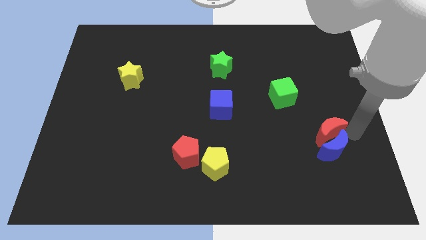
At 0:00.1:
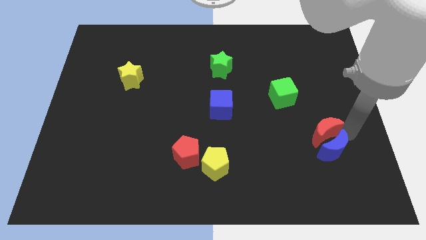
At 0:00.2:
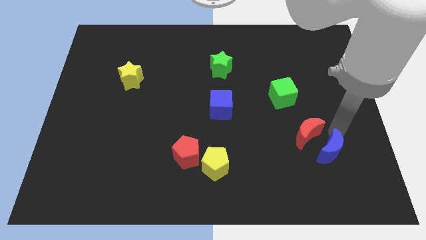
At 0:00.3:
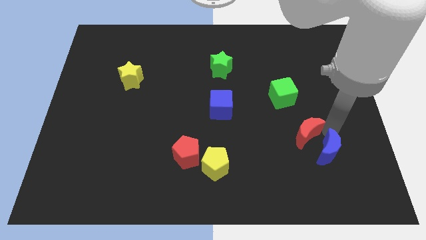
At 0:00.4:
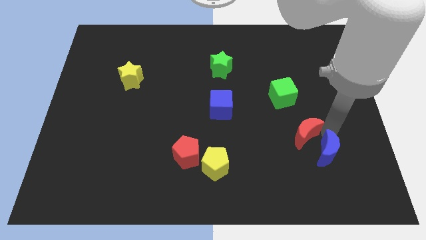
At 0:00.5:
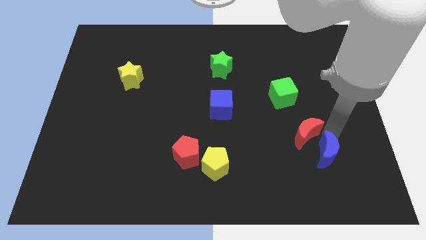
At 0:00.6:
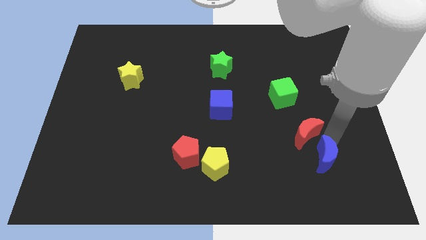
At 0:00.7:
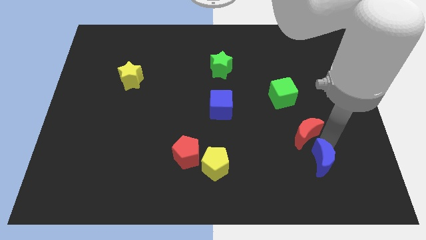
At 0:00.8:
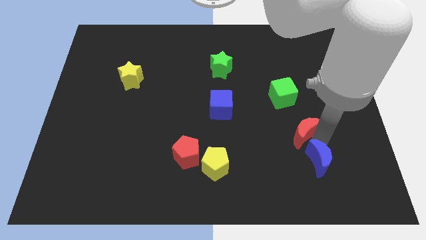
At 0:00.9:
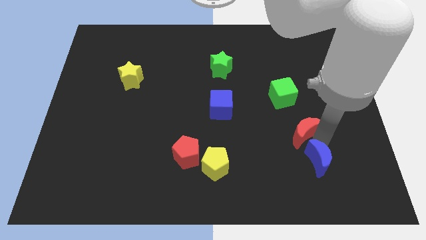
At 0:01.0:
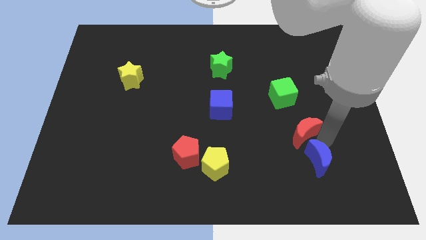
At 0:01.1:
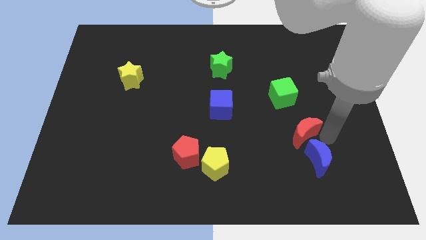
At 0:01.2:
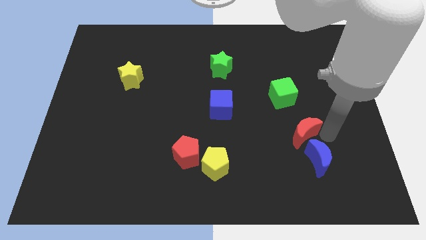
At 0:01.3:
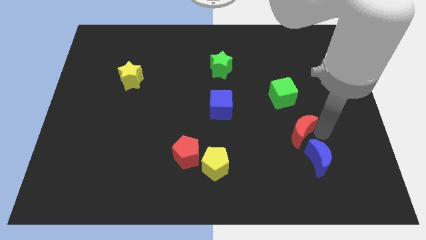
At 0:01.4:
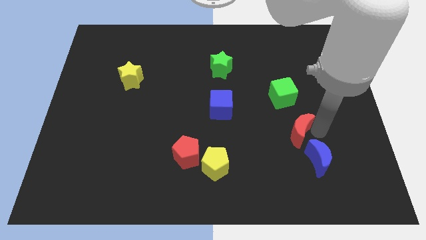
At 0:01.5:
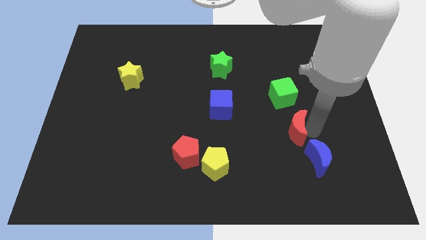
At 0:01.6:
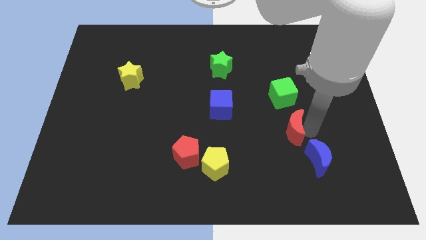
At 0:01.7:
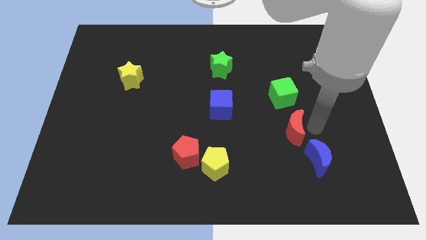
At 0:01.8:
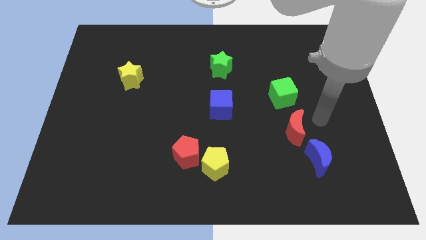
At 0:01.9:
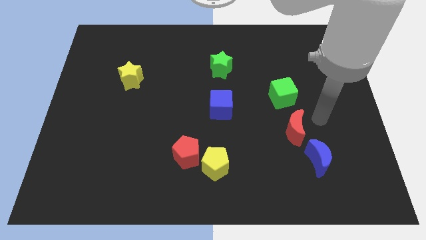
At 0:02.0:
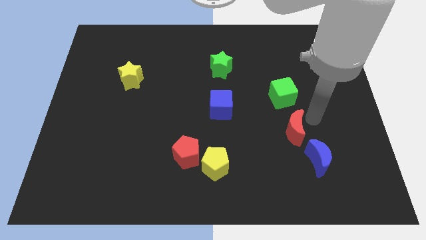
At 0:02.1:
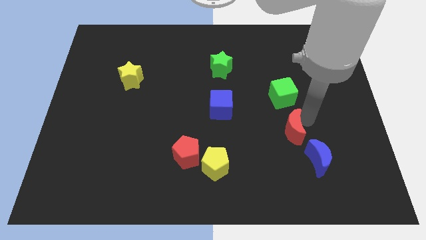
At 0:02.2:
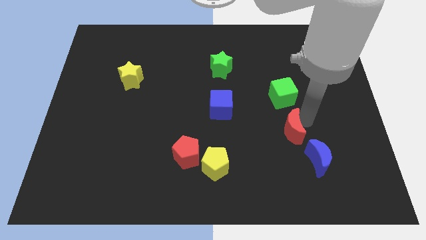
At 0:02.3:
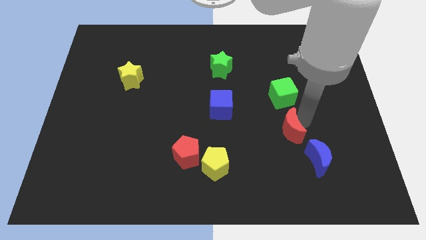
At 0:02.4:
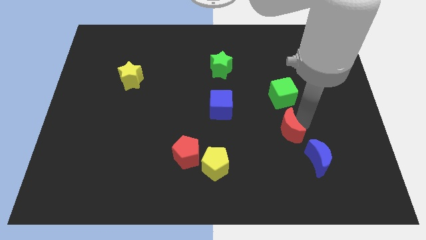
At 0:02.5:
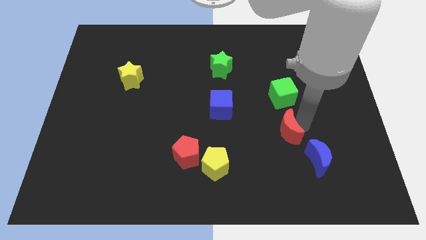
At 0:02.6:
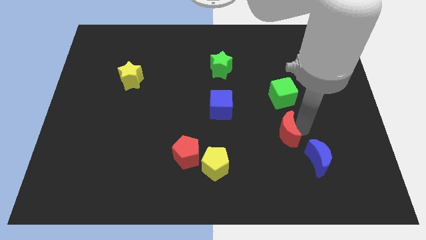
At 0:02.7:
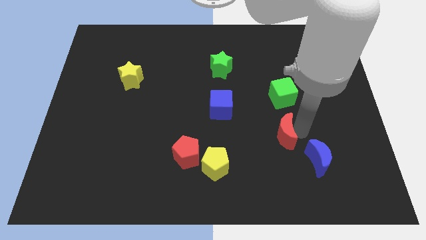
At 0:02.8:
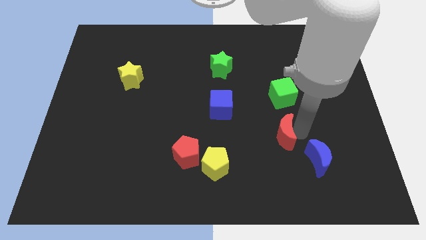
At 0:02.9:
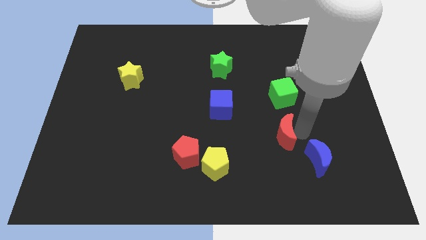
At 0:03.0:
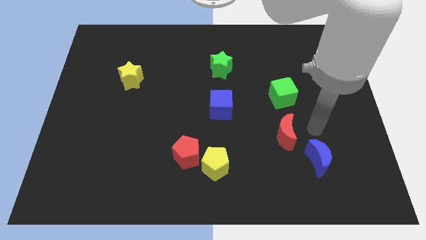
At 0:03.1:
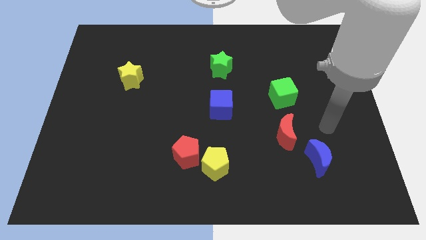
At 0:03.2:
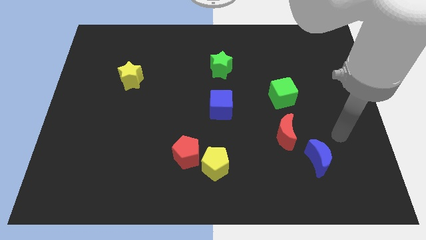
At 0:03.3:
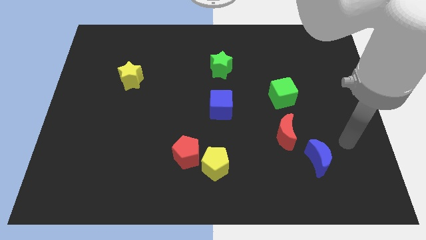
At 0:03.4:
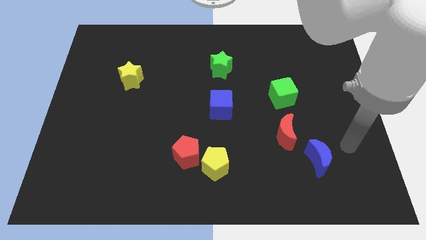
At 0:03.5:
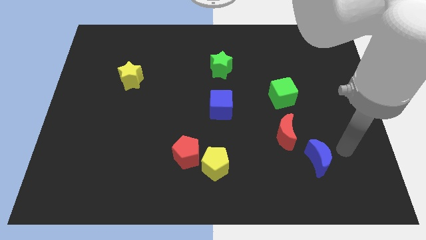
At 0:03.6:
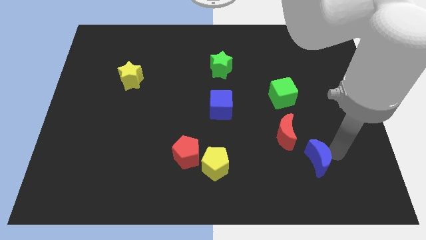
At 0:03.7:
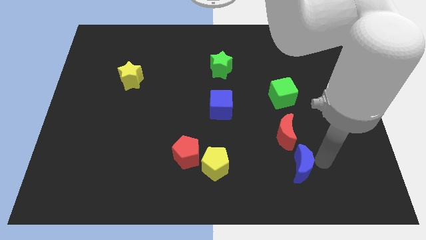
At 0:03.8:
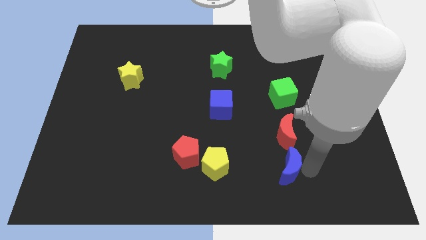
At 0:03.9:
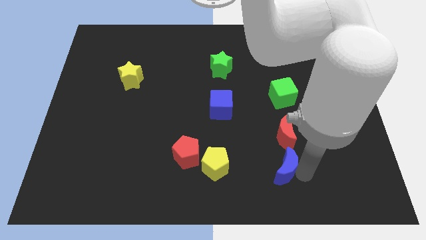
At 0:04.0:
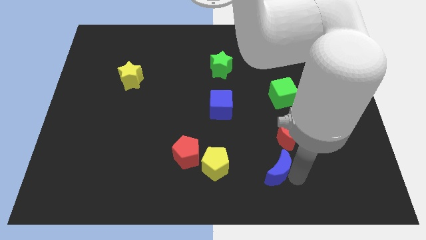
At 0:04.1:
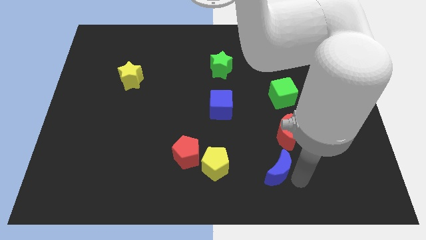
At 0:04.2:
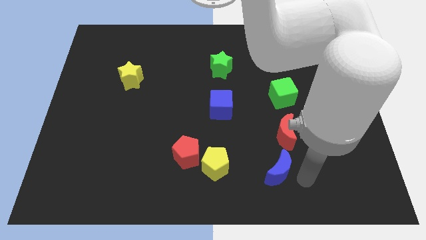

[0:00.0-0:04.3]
move the crescents to the left of the board

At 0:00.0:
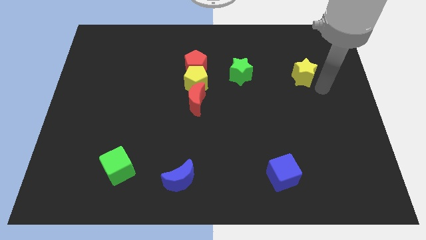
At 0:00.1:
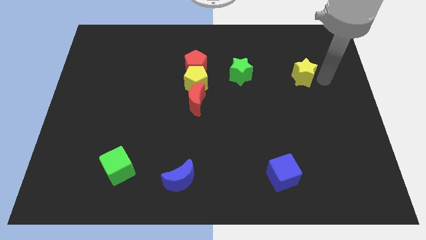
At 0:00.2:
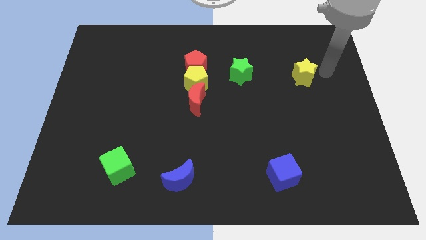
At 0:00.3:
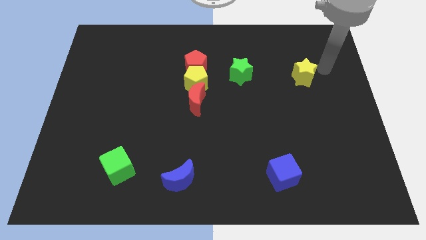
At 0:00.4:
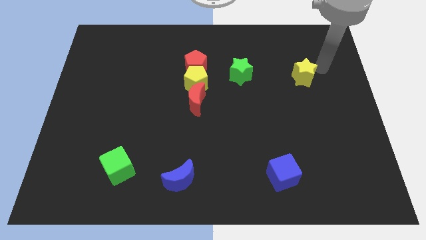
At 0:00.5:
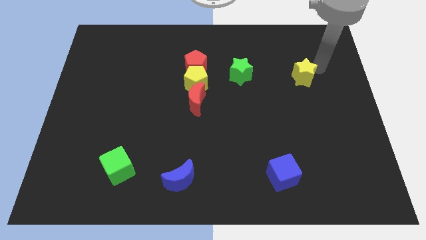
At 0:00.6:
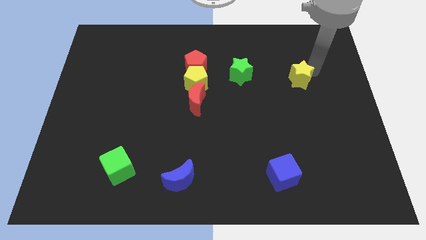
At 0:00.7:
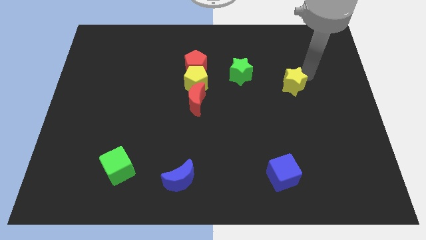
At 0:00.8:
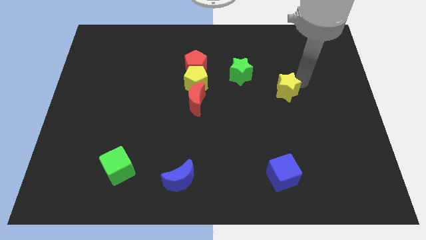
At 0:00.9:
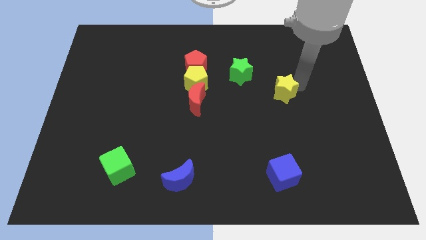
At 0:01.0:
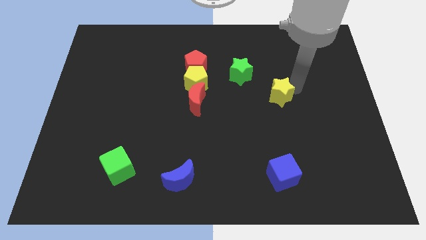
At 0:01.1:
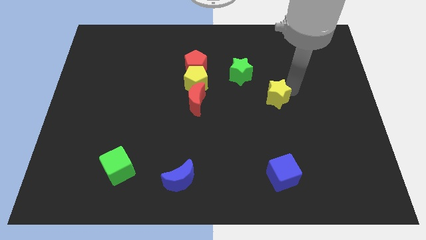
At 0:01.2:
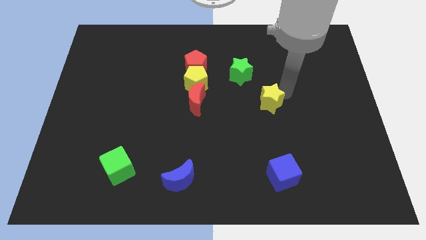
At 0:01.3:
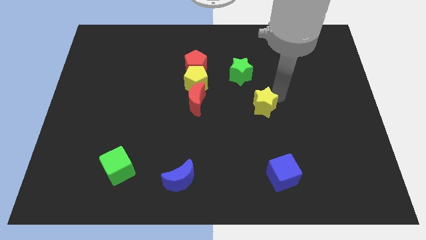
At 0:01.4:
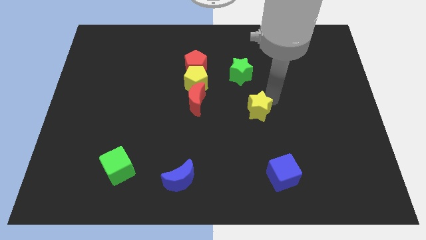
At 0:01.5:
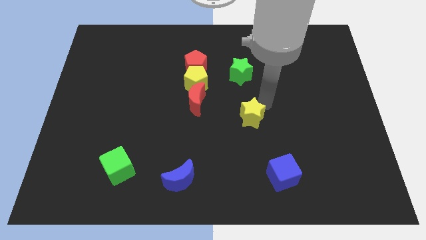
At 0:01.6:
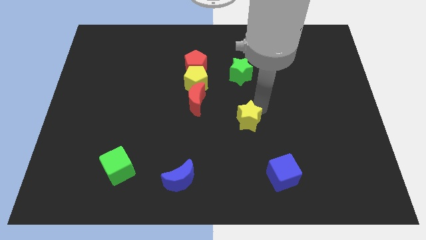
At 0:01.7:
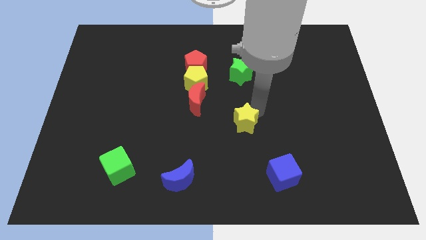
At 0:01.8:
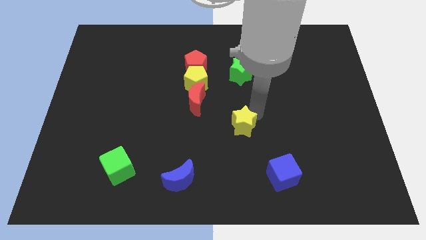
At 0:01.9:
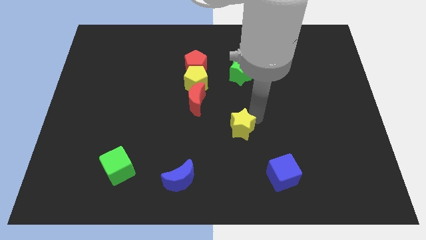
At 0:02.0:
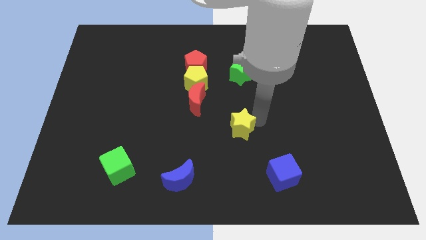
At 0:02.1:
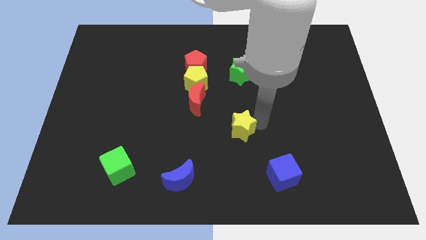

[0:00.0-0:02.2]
place the yellow star to the bottom right of the red moon

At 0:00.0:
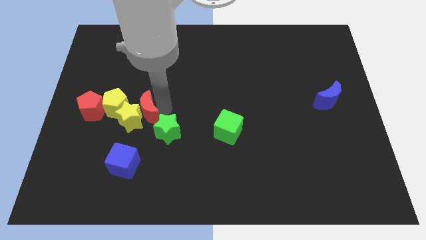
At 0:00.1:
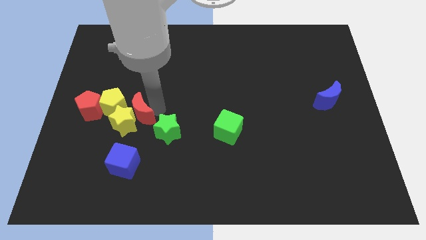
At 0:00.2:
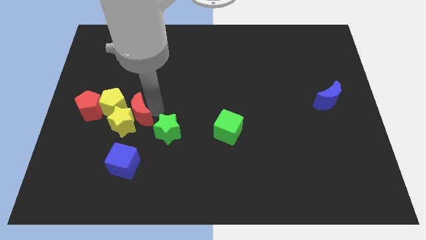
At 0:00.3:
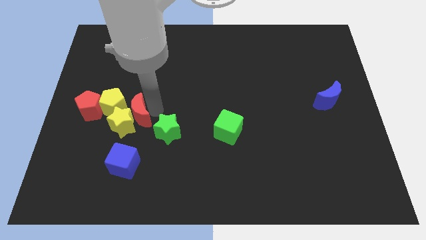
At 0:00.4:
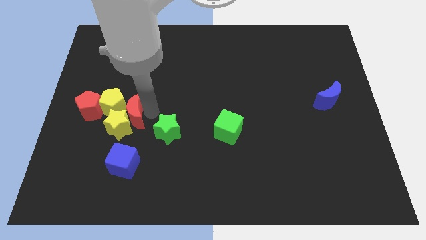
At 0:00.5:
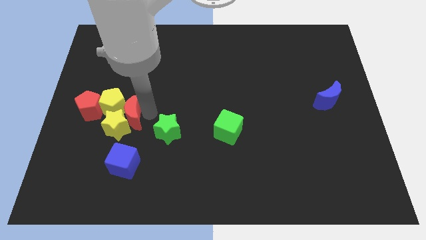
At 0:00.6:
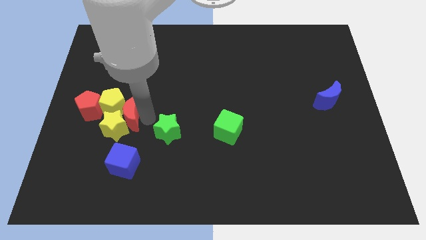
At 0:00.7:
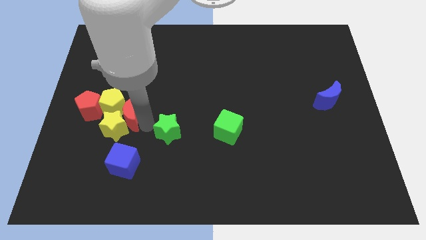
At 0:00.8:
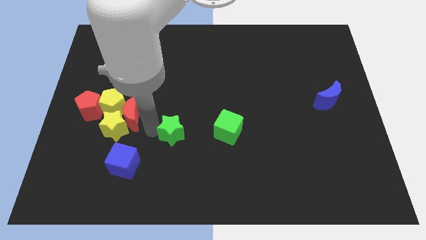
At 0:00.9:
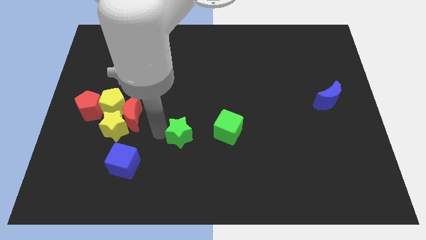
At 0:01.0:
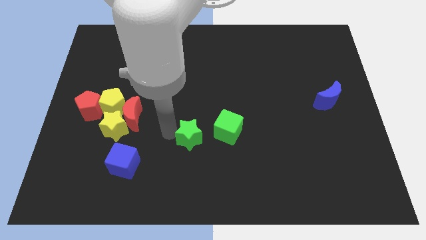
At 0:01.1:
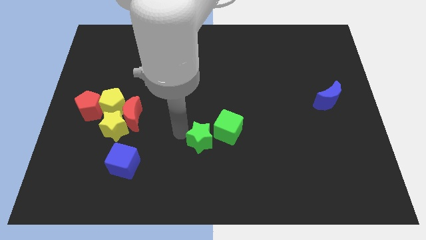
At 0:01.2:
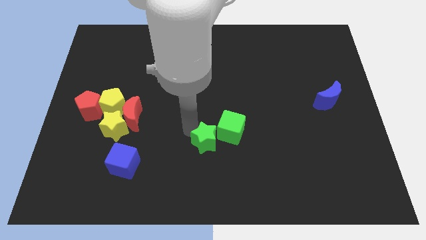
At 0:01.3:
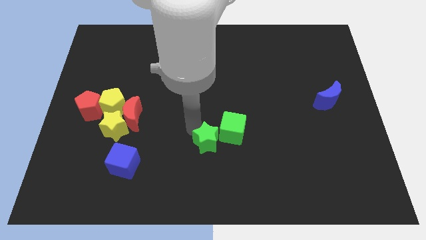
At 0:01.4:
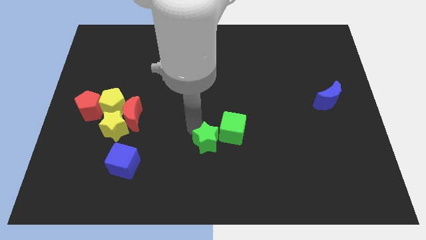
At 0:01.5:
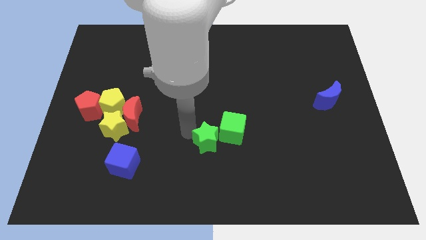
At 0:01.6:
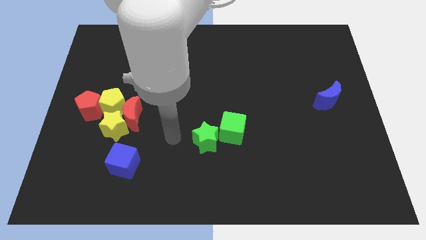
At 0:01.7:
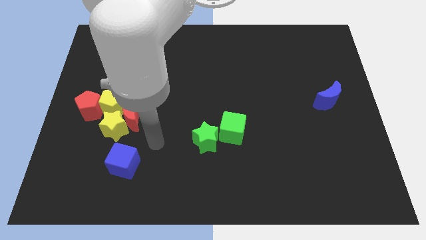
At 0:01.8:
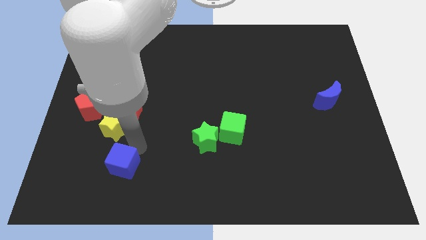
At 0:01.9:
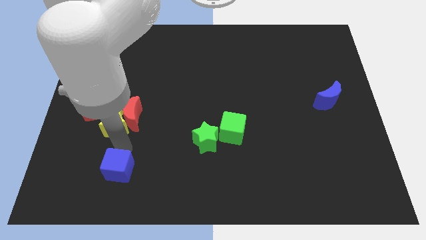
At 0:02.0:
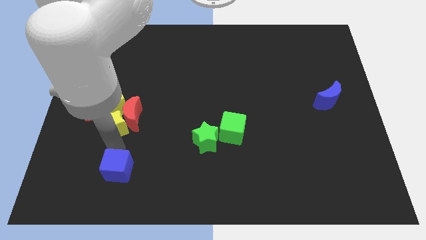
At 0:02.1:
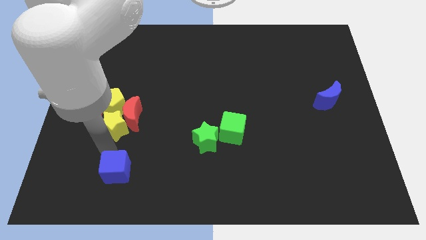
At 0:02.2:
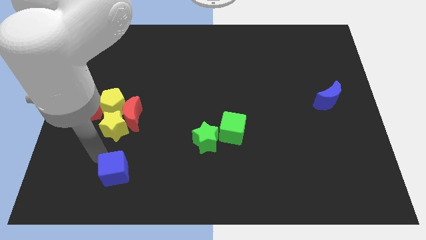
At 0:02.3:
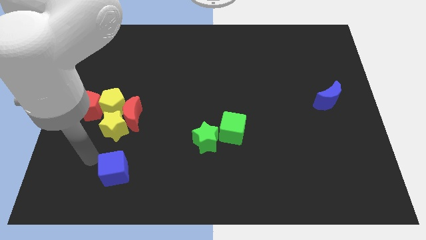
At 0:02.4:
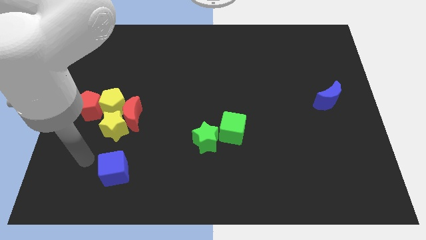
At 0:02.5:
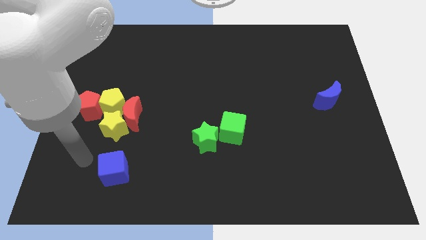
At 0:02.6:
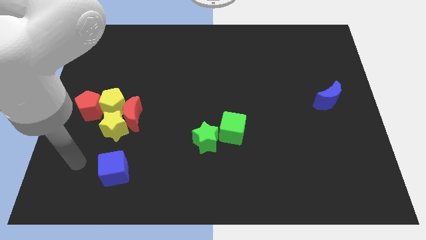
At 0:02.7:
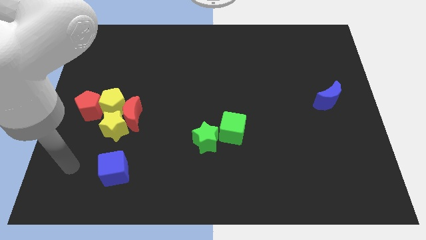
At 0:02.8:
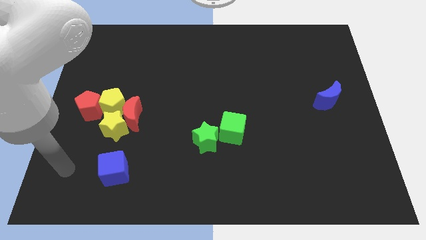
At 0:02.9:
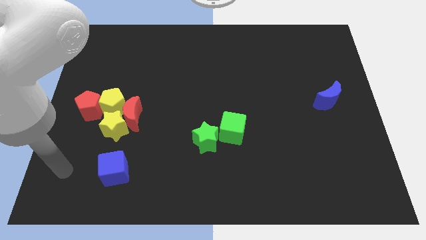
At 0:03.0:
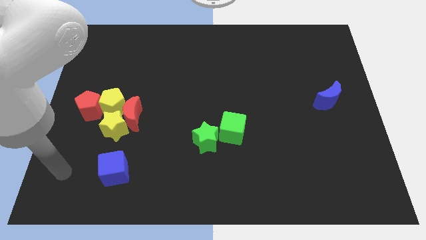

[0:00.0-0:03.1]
push green star close to green cube
